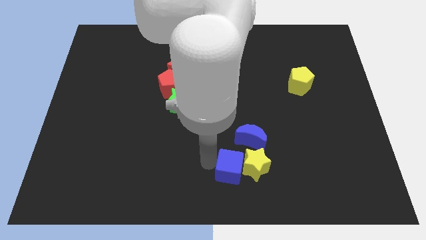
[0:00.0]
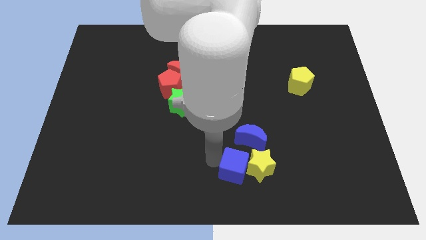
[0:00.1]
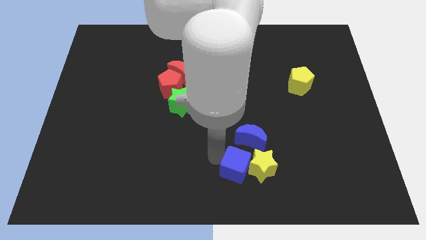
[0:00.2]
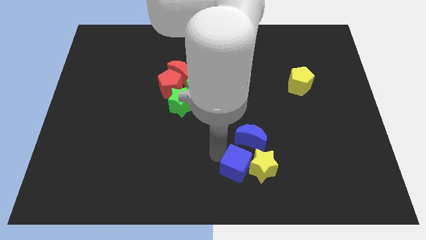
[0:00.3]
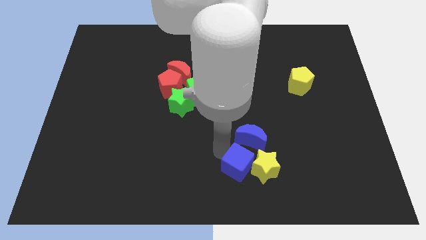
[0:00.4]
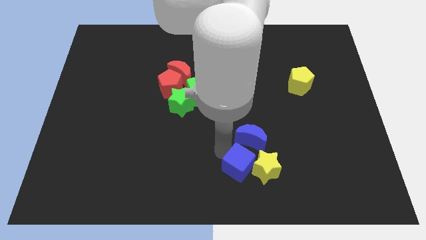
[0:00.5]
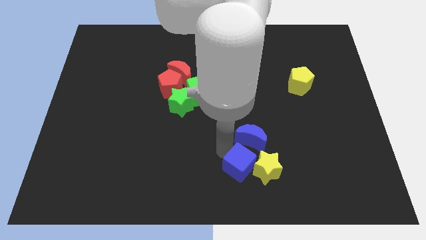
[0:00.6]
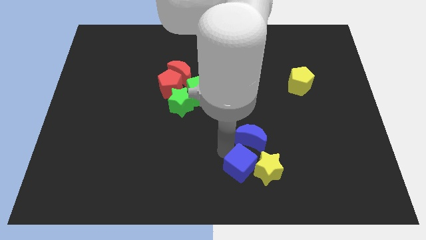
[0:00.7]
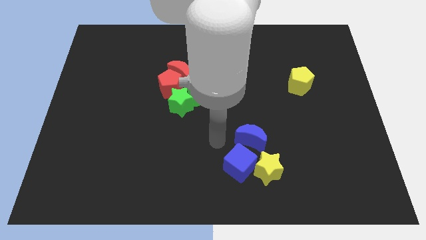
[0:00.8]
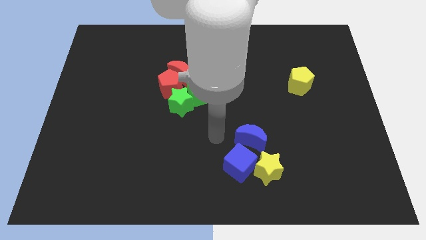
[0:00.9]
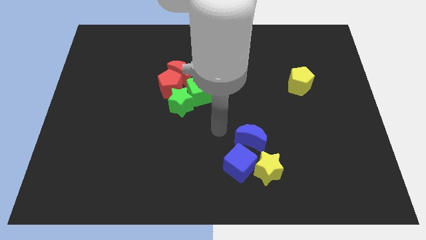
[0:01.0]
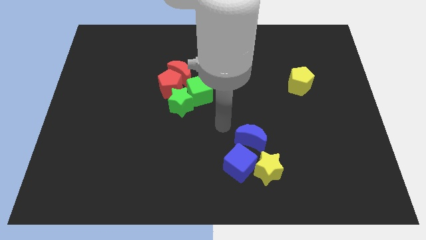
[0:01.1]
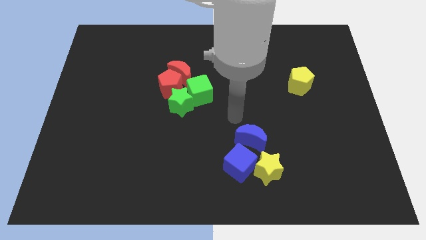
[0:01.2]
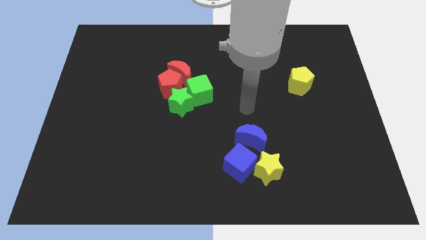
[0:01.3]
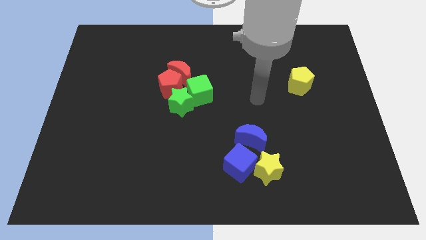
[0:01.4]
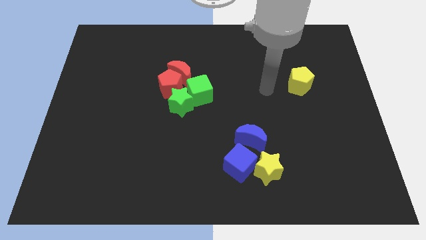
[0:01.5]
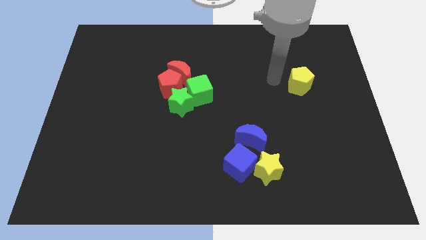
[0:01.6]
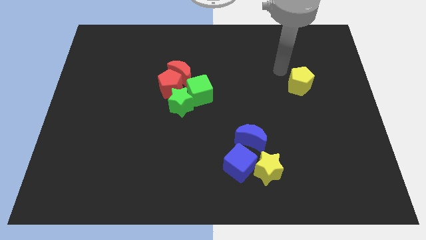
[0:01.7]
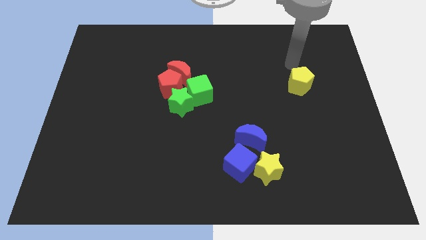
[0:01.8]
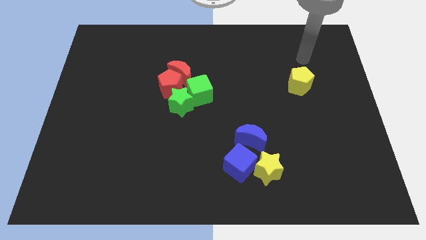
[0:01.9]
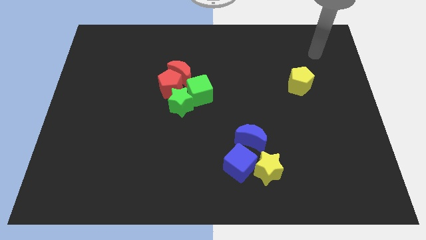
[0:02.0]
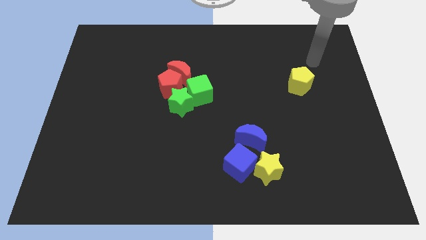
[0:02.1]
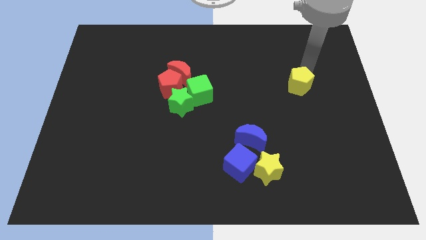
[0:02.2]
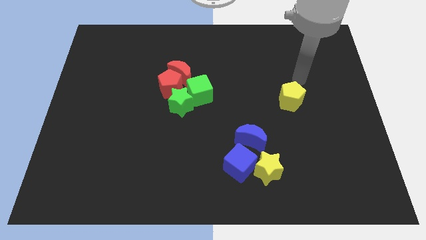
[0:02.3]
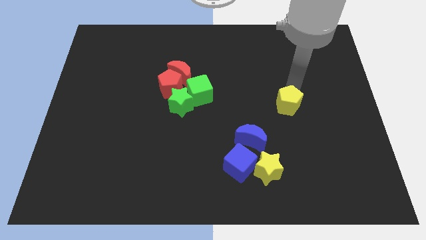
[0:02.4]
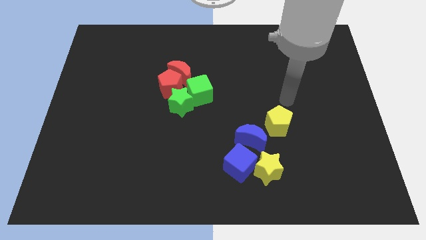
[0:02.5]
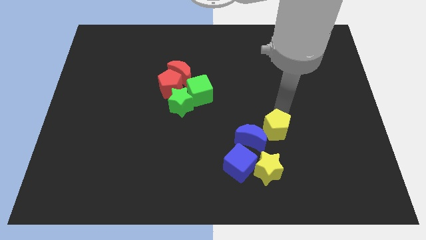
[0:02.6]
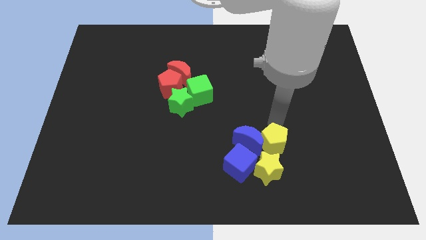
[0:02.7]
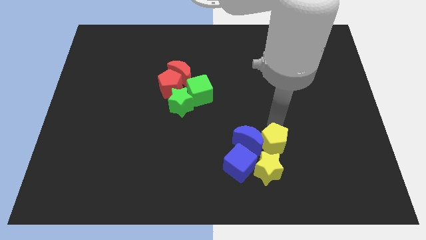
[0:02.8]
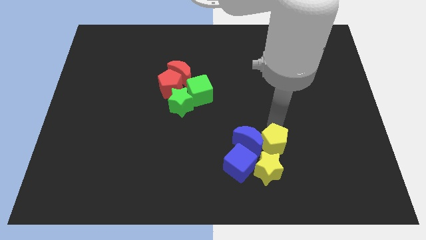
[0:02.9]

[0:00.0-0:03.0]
push the yellow pentagon into the blue crescent

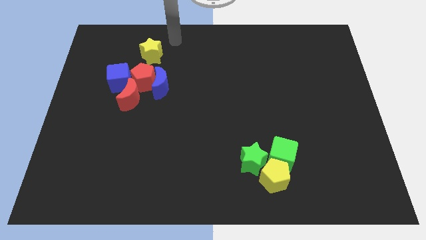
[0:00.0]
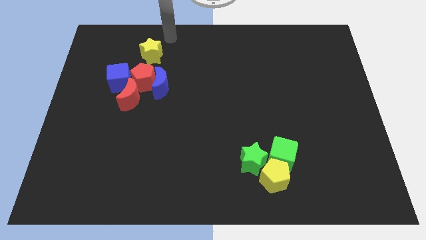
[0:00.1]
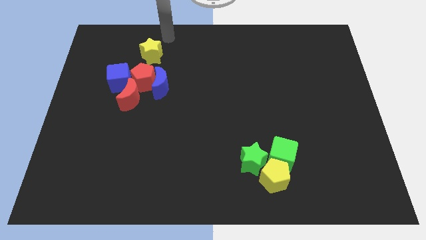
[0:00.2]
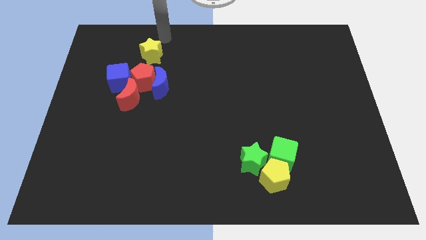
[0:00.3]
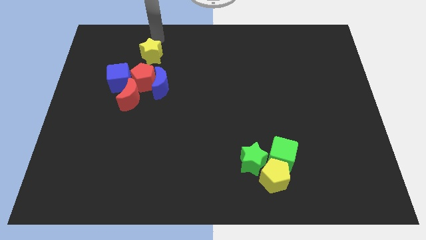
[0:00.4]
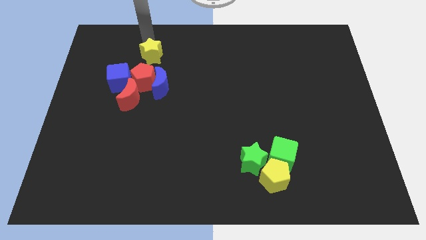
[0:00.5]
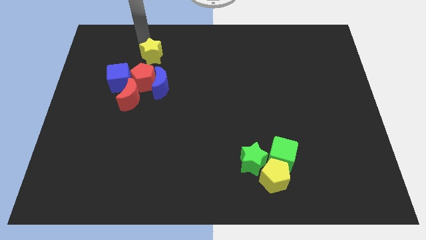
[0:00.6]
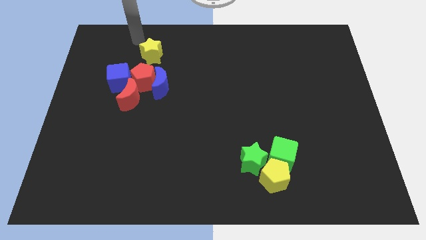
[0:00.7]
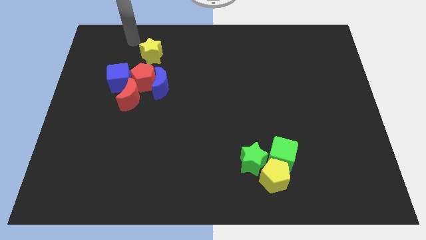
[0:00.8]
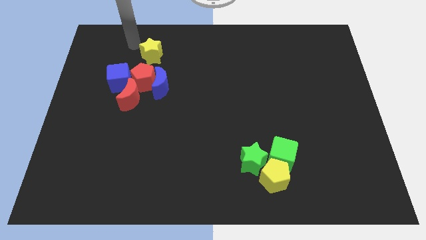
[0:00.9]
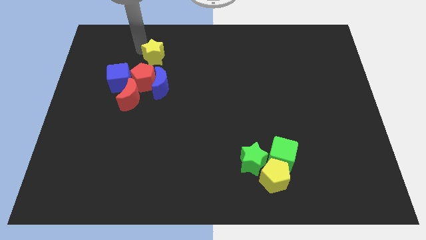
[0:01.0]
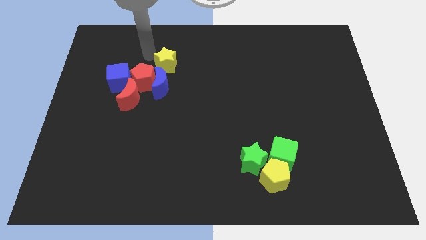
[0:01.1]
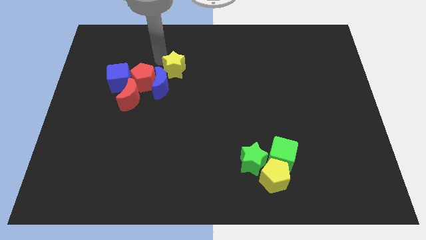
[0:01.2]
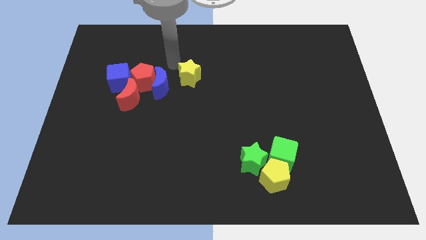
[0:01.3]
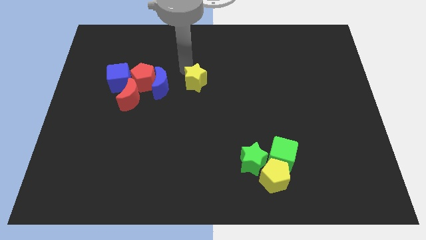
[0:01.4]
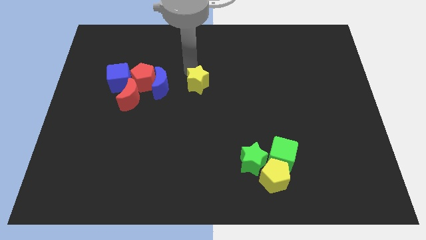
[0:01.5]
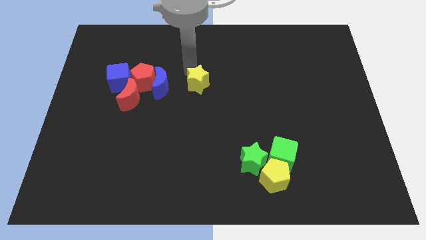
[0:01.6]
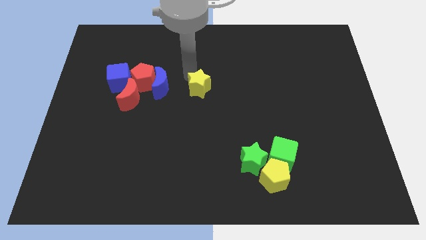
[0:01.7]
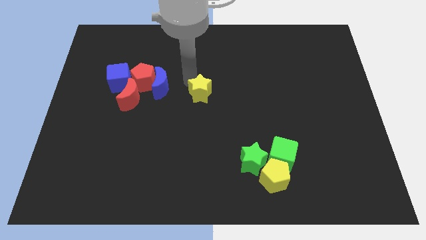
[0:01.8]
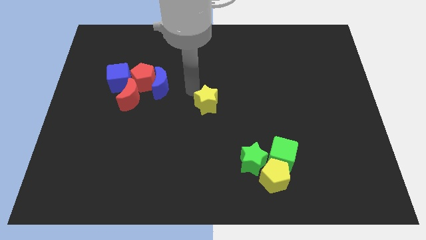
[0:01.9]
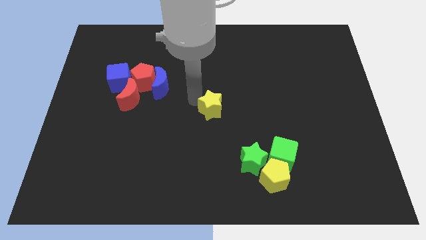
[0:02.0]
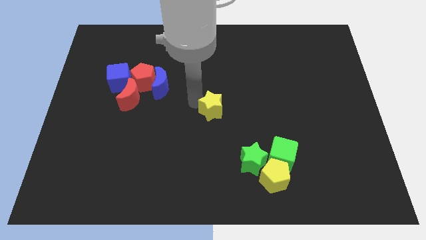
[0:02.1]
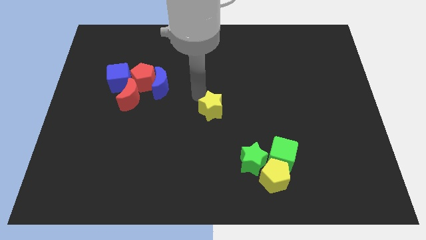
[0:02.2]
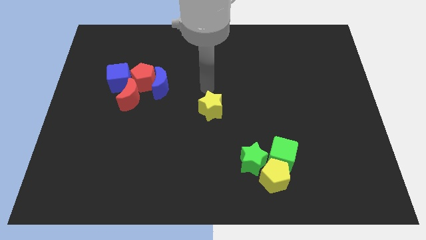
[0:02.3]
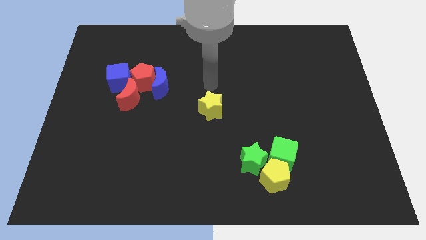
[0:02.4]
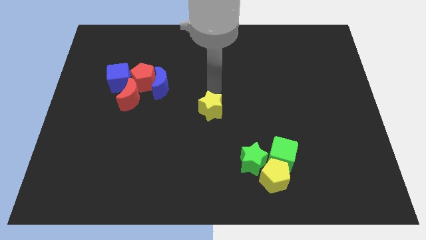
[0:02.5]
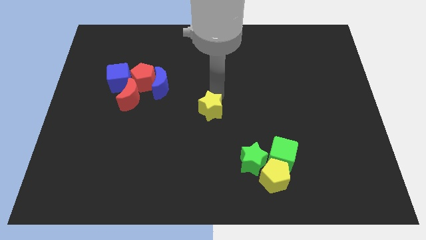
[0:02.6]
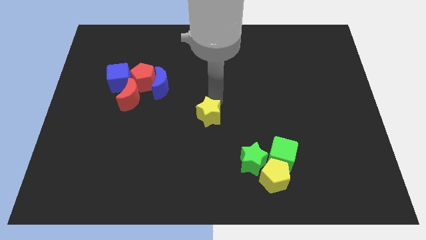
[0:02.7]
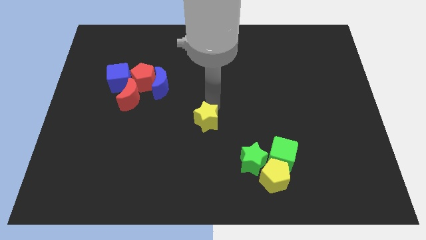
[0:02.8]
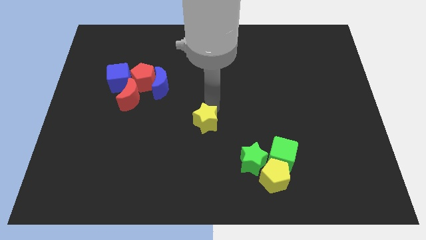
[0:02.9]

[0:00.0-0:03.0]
move the yellow star diagonally top left to the green star

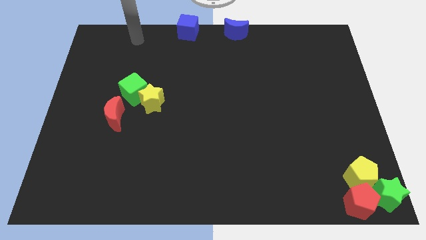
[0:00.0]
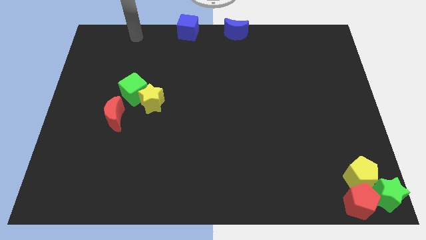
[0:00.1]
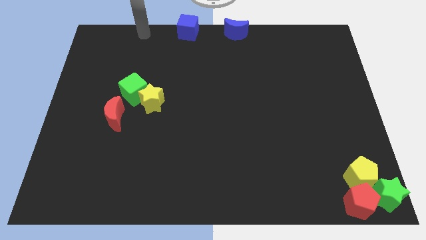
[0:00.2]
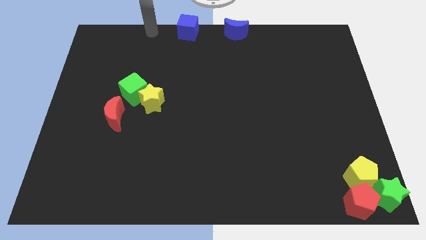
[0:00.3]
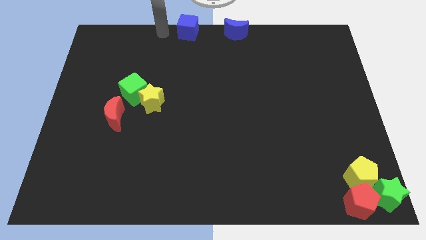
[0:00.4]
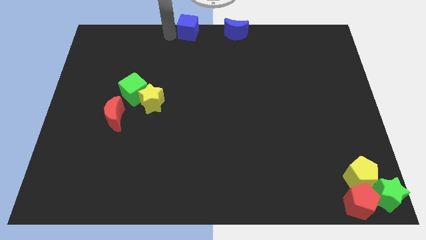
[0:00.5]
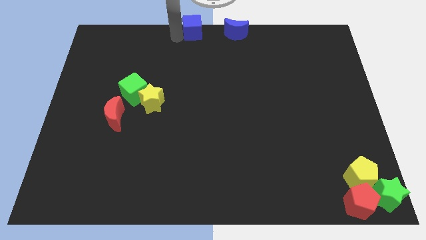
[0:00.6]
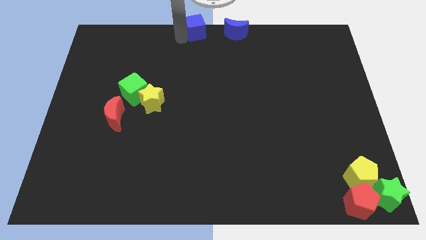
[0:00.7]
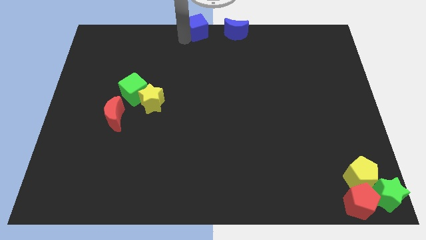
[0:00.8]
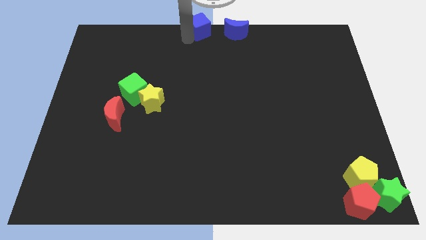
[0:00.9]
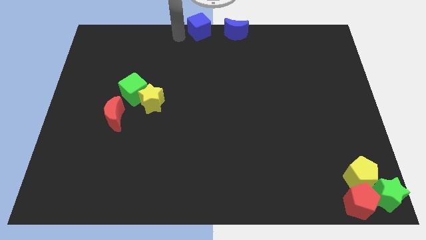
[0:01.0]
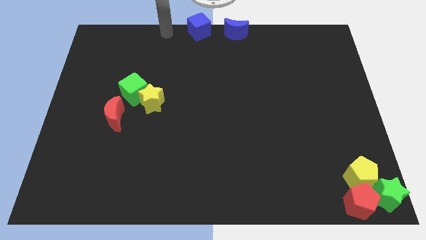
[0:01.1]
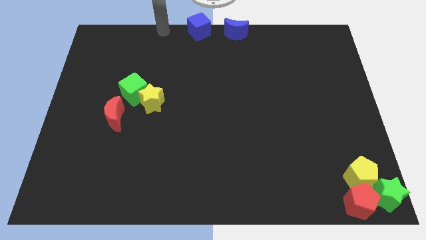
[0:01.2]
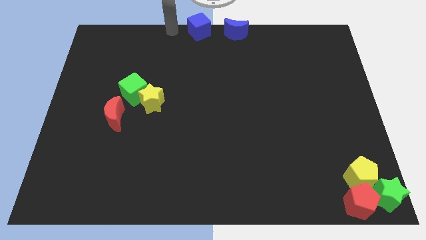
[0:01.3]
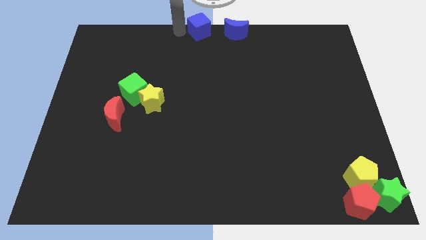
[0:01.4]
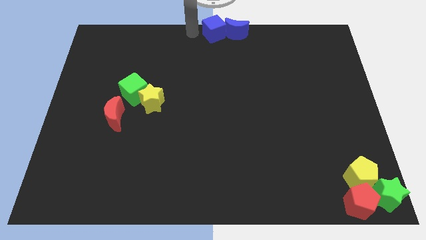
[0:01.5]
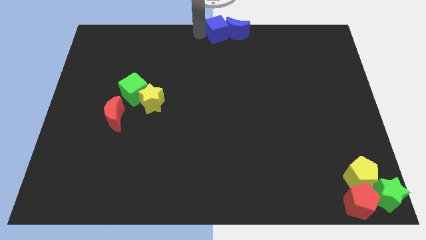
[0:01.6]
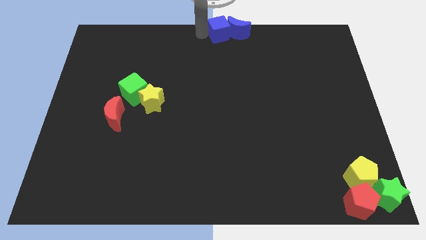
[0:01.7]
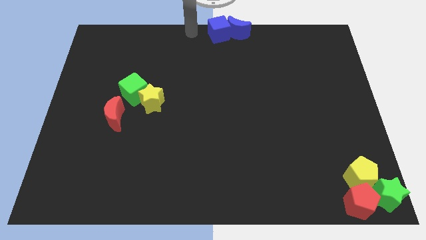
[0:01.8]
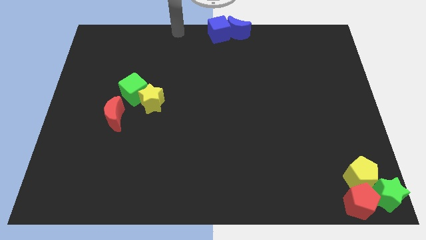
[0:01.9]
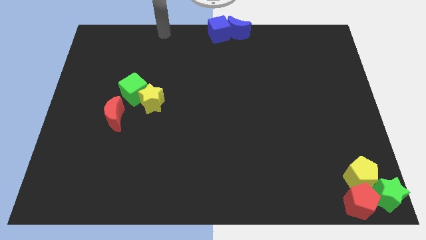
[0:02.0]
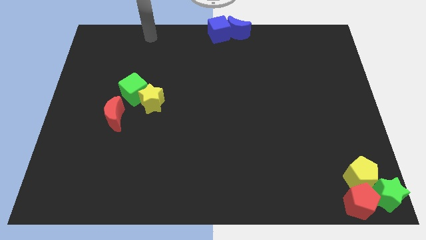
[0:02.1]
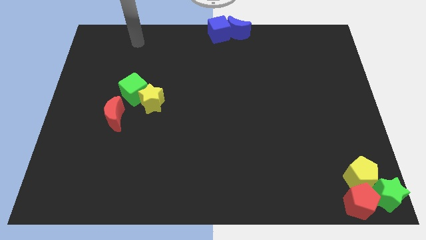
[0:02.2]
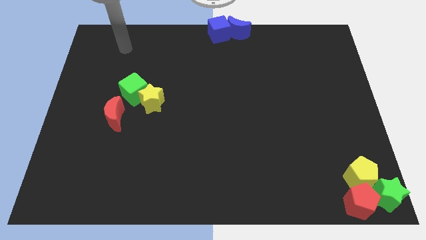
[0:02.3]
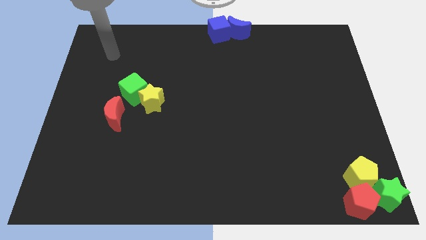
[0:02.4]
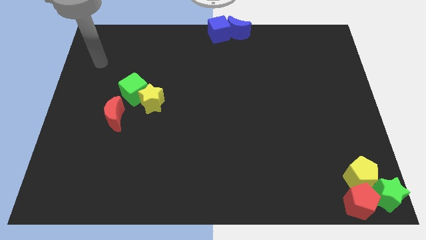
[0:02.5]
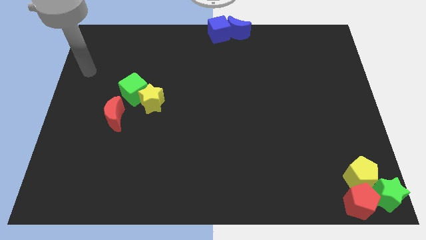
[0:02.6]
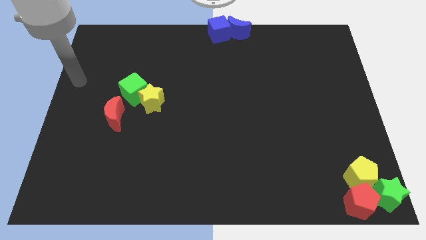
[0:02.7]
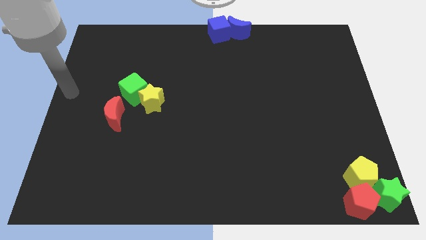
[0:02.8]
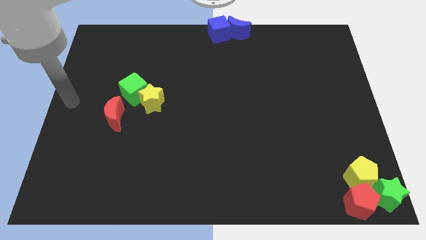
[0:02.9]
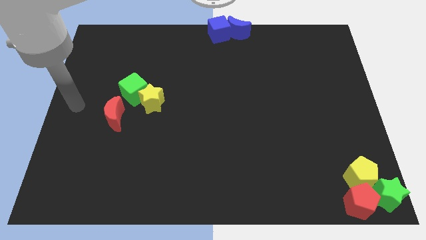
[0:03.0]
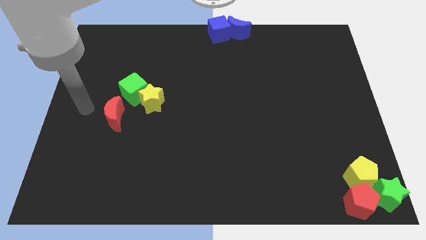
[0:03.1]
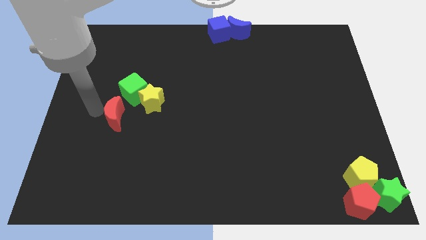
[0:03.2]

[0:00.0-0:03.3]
push the blue block into blue crescent
